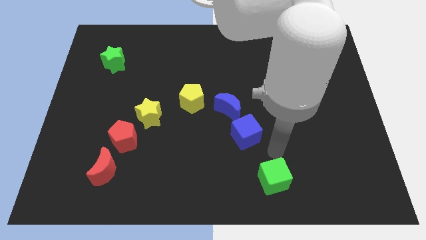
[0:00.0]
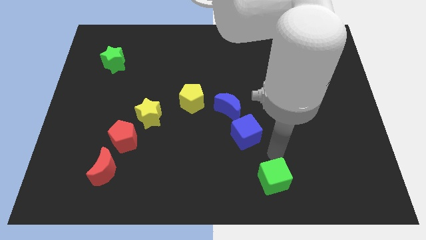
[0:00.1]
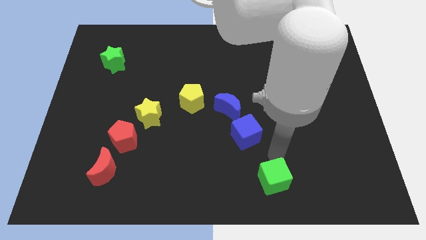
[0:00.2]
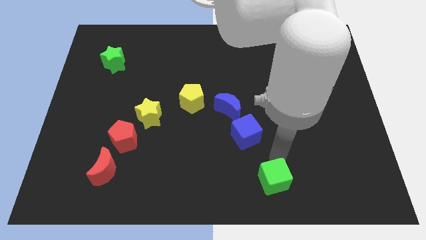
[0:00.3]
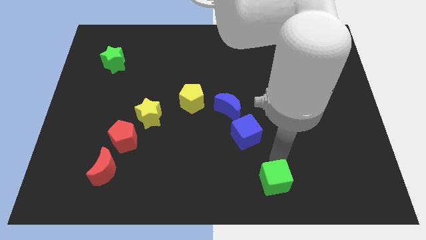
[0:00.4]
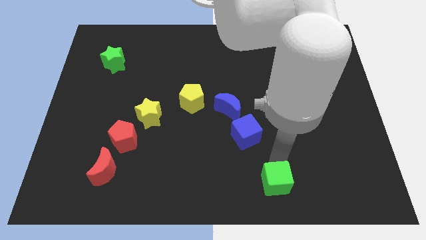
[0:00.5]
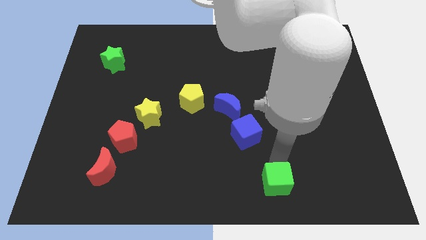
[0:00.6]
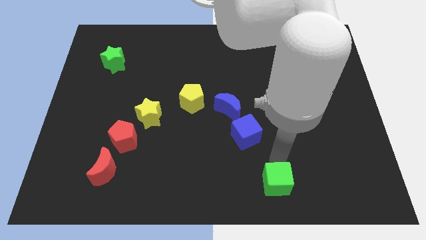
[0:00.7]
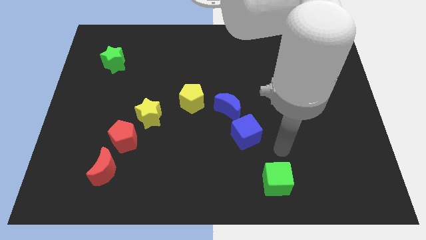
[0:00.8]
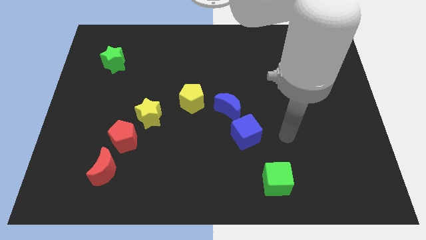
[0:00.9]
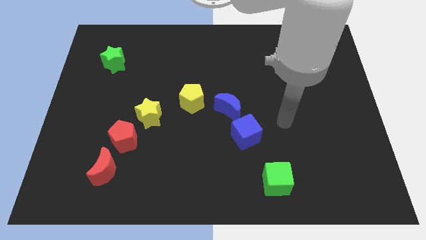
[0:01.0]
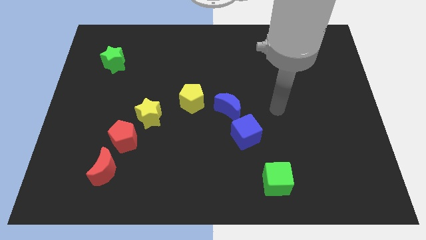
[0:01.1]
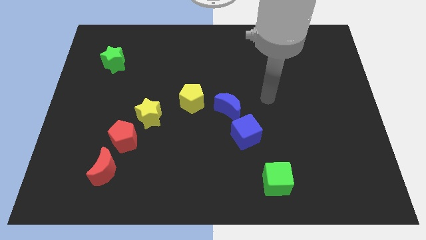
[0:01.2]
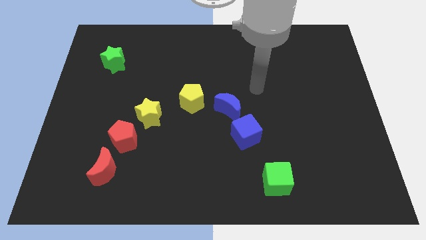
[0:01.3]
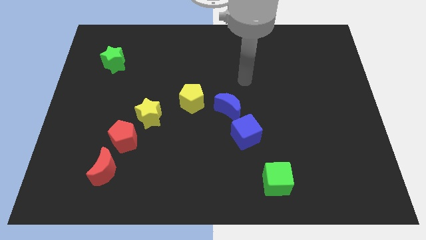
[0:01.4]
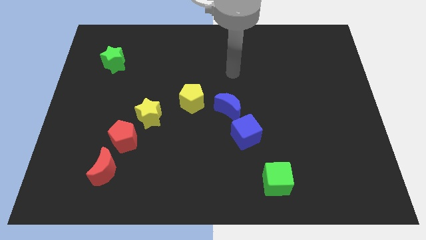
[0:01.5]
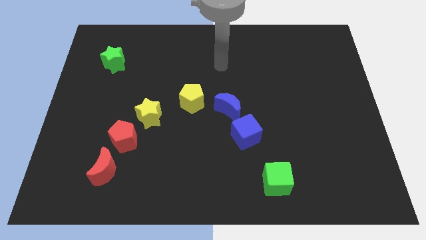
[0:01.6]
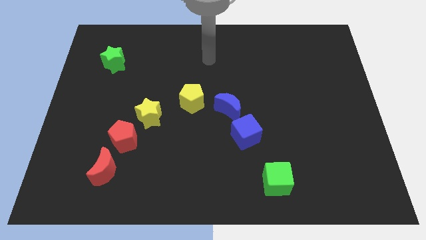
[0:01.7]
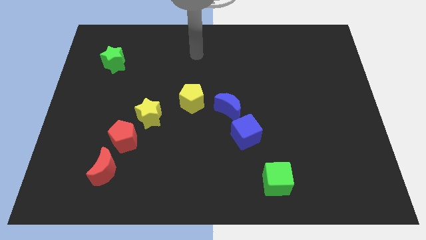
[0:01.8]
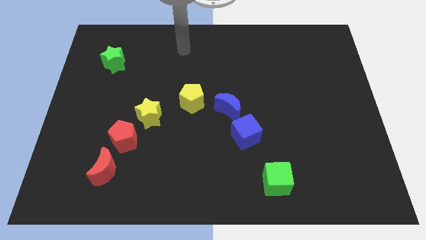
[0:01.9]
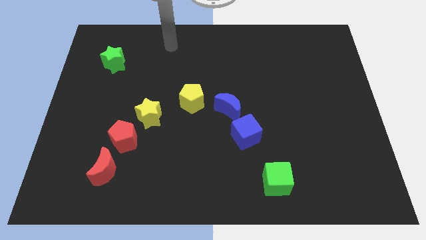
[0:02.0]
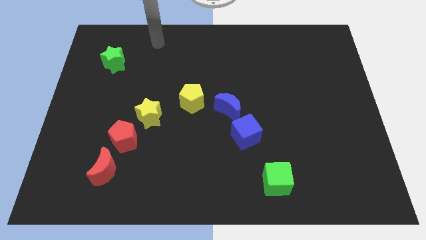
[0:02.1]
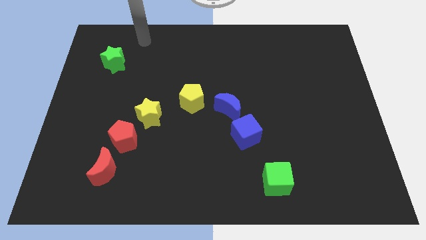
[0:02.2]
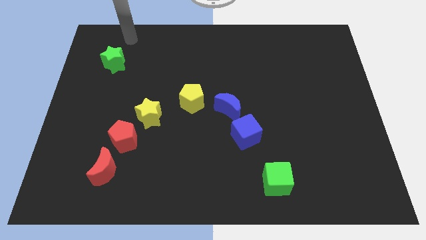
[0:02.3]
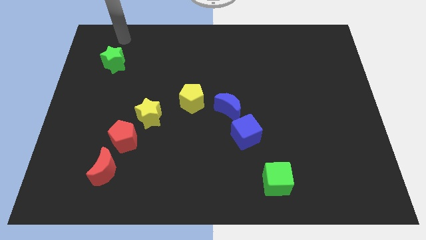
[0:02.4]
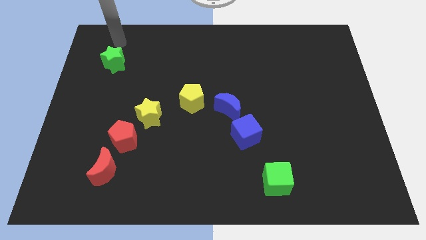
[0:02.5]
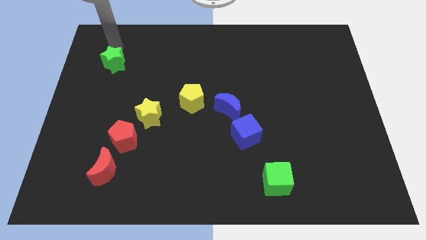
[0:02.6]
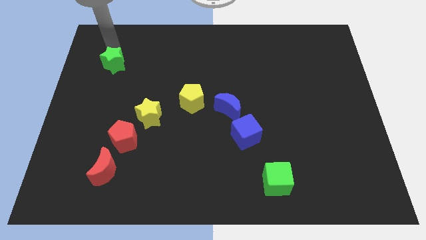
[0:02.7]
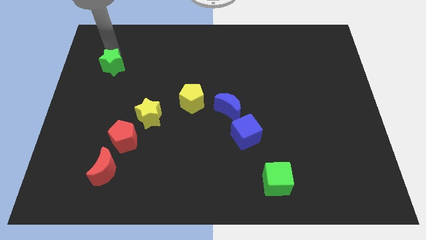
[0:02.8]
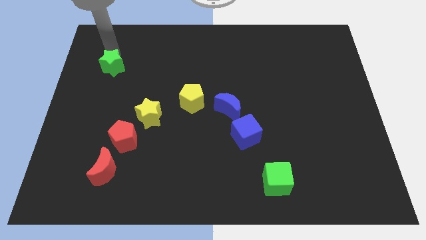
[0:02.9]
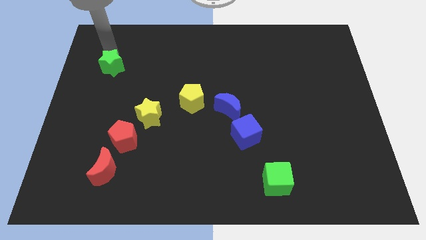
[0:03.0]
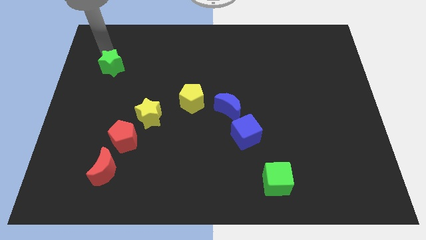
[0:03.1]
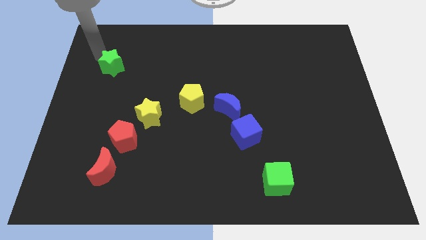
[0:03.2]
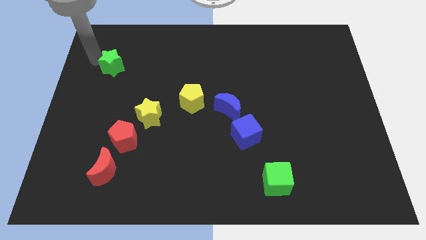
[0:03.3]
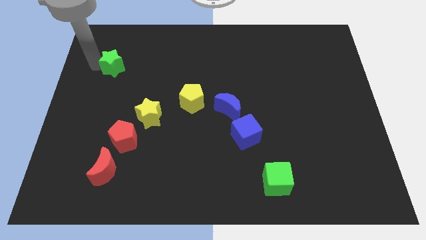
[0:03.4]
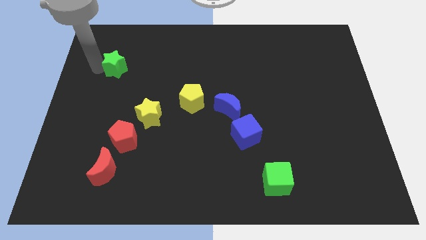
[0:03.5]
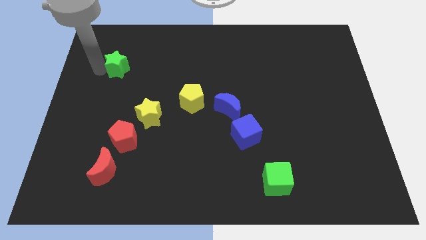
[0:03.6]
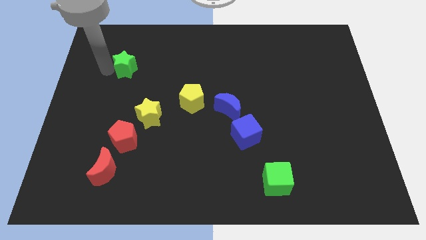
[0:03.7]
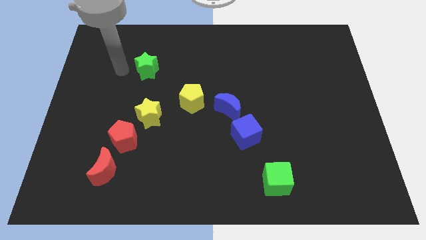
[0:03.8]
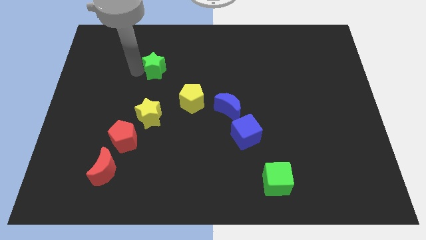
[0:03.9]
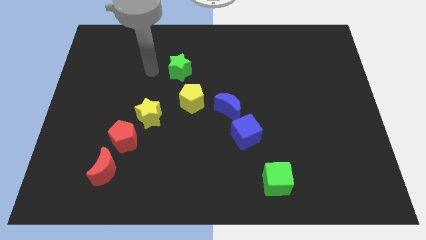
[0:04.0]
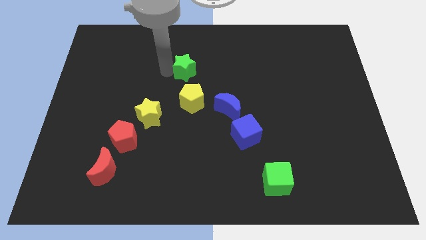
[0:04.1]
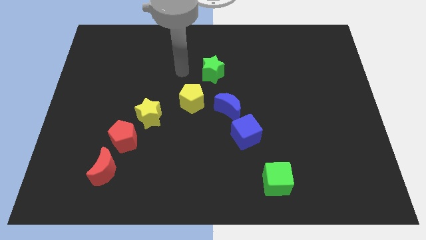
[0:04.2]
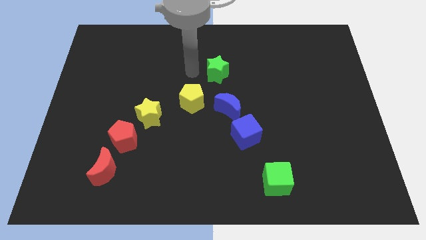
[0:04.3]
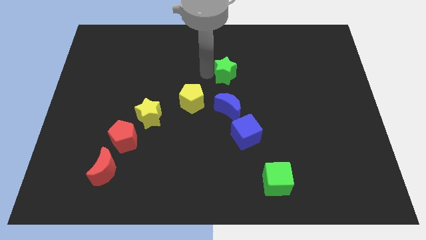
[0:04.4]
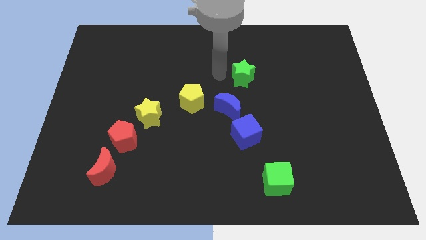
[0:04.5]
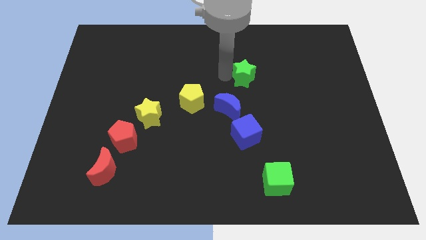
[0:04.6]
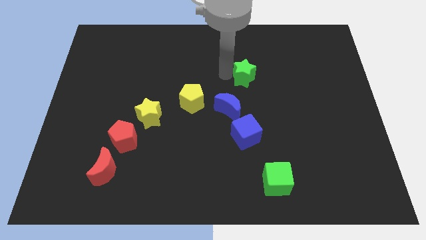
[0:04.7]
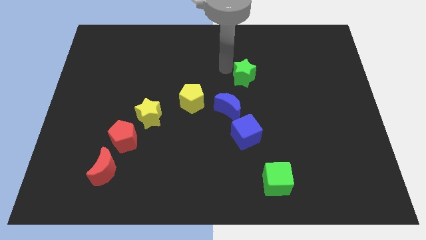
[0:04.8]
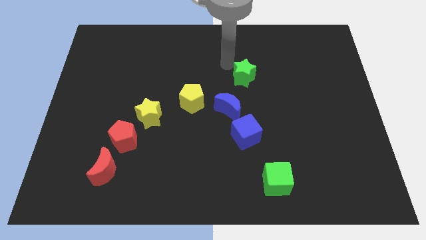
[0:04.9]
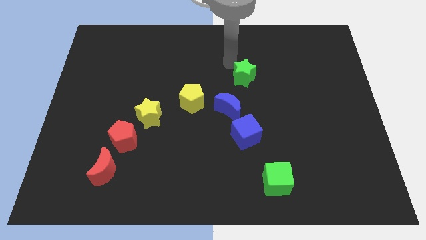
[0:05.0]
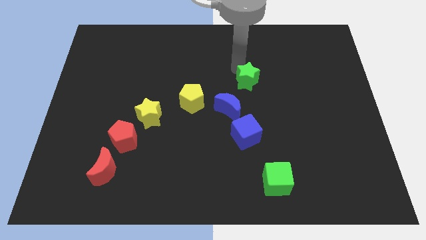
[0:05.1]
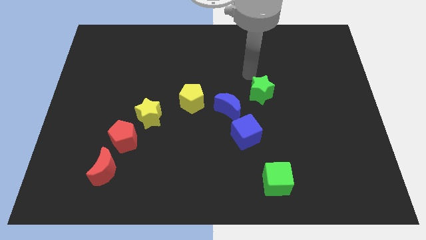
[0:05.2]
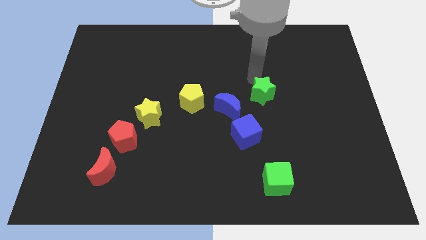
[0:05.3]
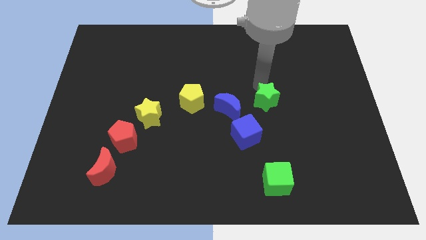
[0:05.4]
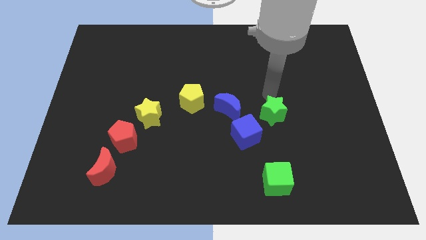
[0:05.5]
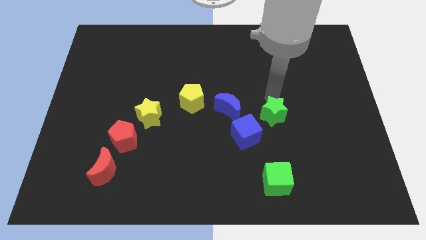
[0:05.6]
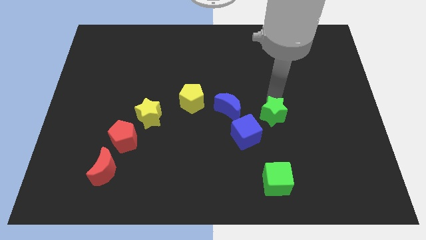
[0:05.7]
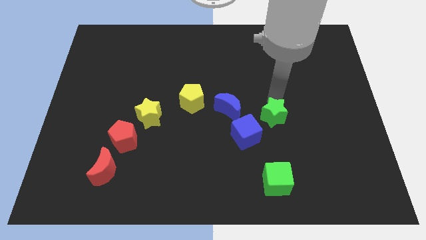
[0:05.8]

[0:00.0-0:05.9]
slide the green star to top right of blue cube

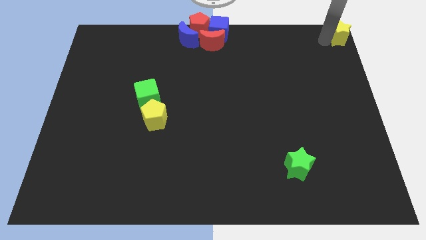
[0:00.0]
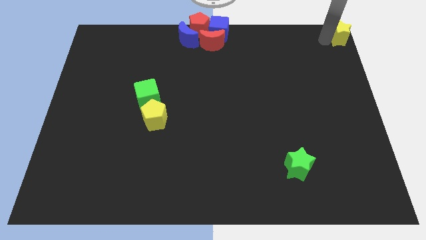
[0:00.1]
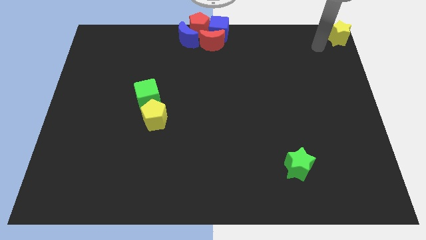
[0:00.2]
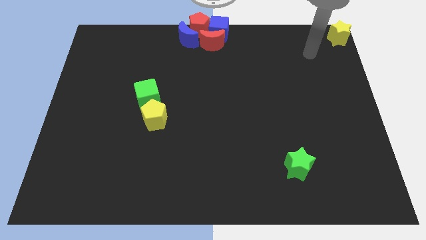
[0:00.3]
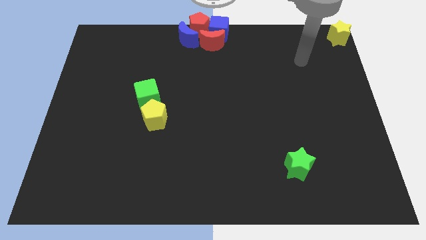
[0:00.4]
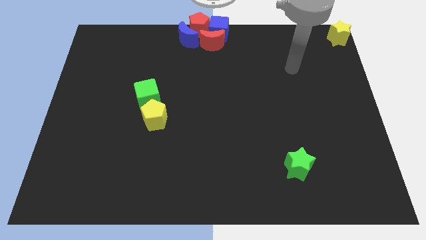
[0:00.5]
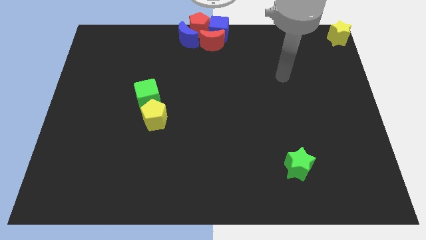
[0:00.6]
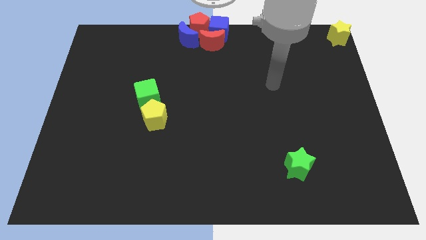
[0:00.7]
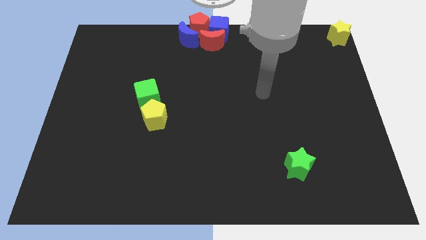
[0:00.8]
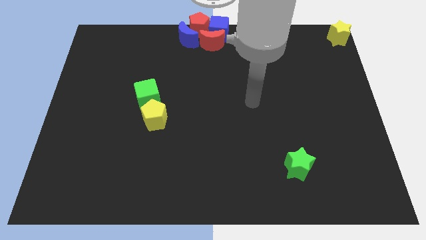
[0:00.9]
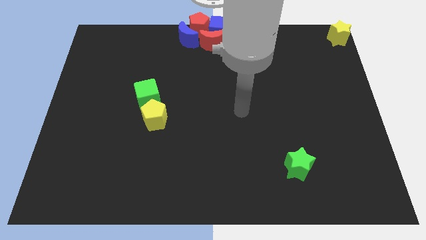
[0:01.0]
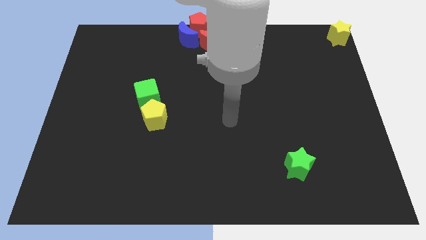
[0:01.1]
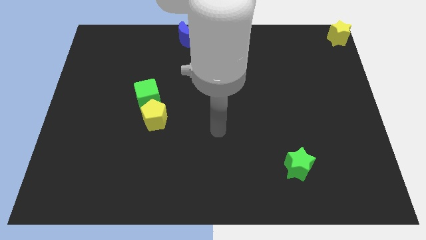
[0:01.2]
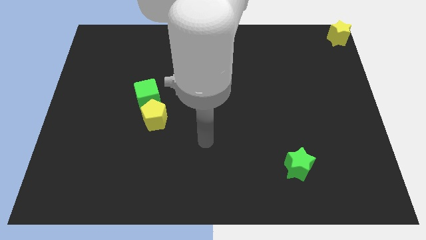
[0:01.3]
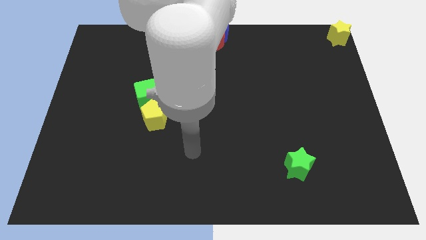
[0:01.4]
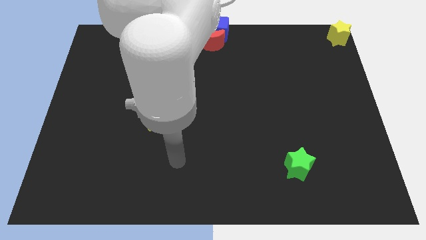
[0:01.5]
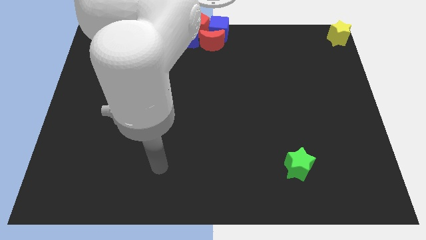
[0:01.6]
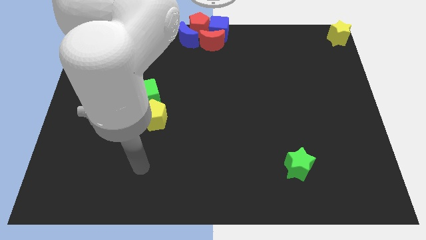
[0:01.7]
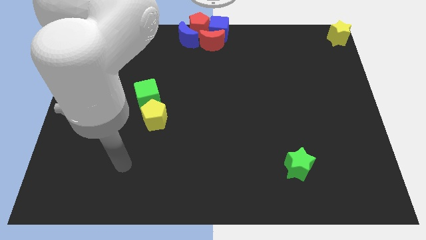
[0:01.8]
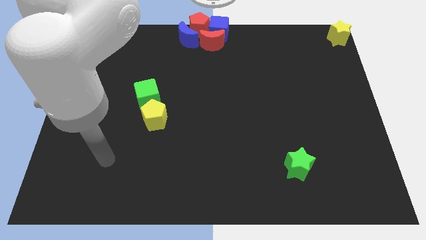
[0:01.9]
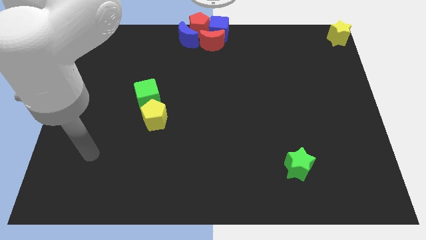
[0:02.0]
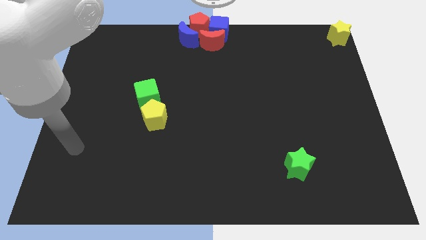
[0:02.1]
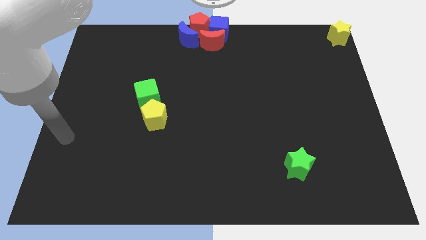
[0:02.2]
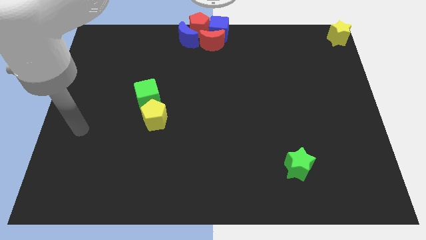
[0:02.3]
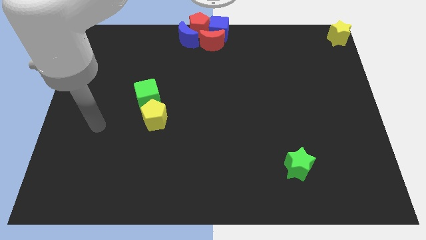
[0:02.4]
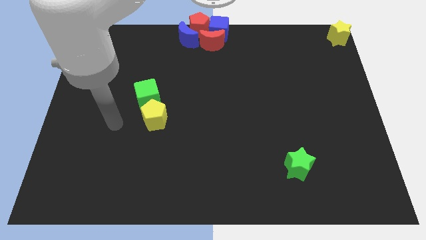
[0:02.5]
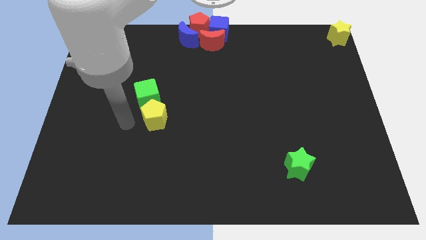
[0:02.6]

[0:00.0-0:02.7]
move the arm towards the left of the yellow pentagon

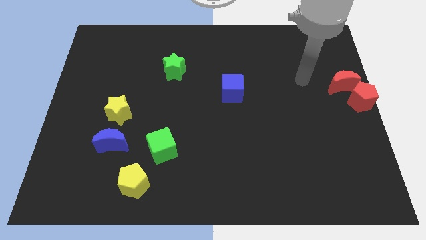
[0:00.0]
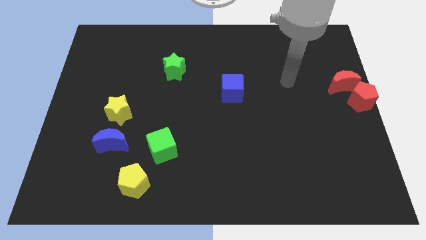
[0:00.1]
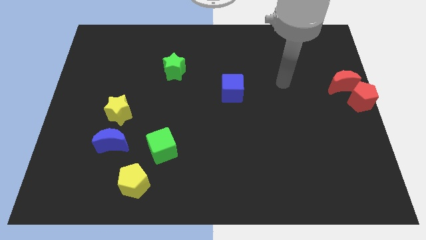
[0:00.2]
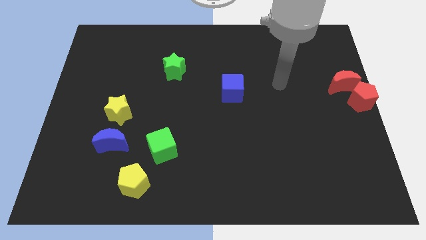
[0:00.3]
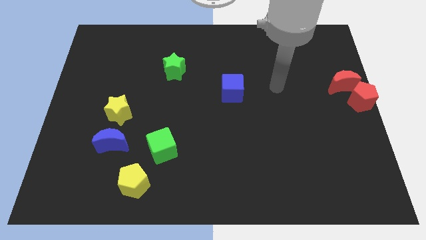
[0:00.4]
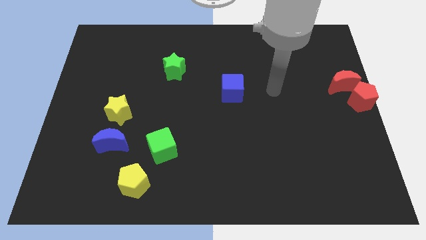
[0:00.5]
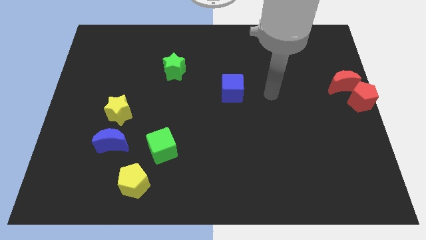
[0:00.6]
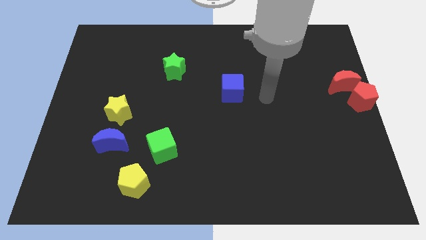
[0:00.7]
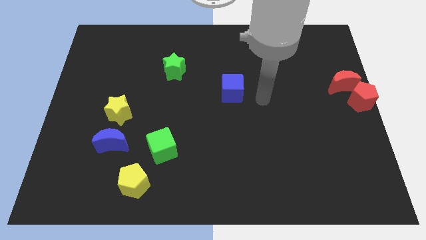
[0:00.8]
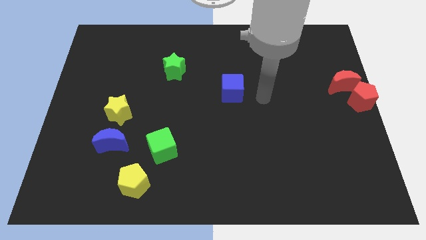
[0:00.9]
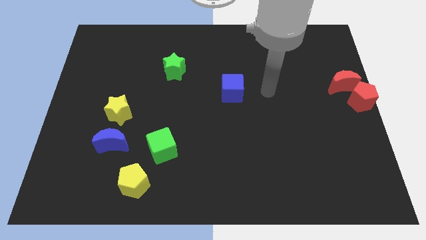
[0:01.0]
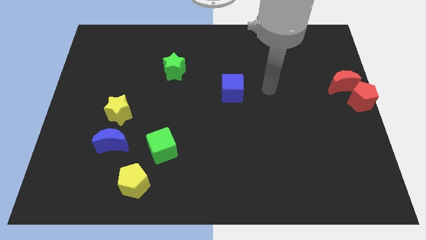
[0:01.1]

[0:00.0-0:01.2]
move your arm towards the blue cube
